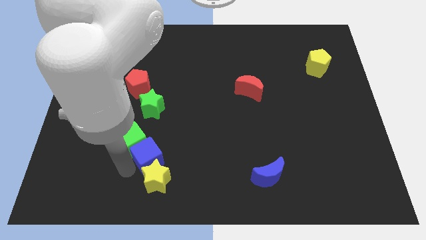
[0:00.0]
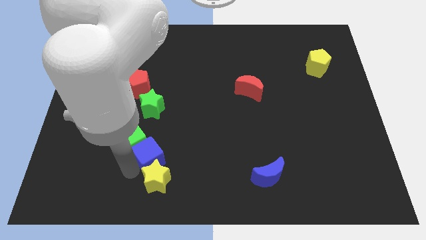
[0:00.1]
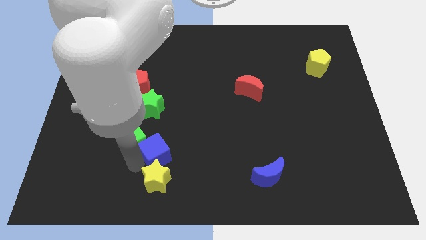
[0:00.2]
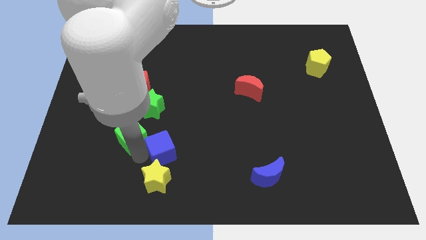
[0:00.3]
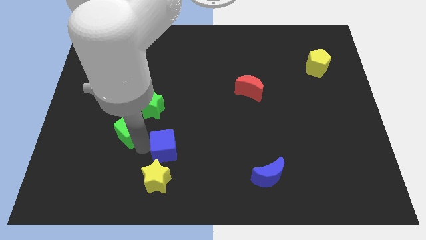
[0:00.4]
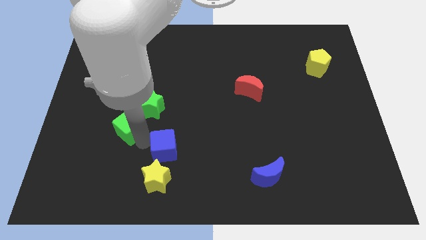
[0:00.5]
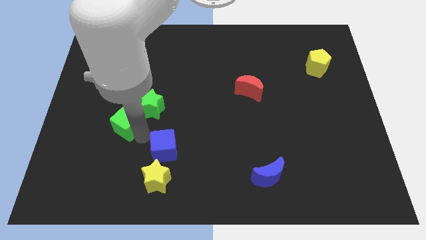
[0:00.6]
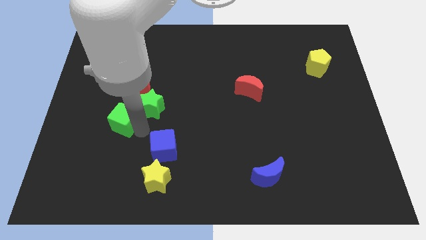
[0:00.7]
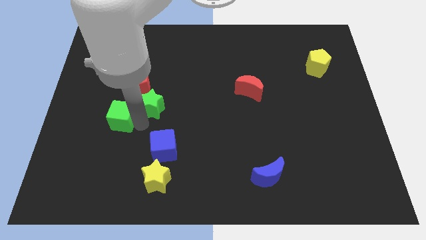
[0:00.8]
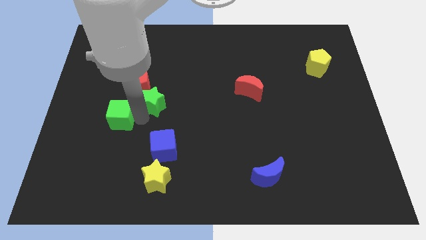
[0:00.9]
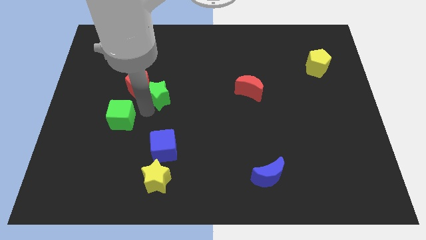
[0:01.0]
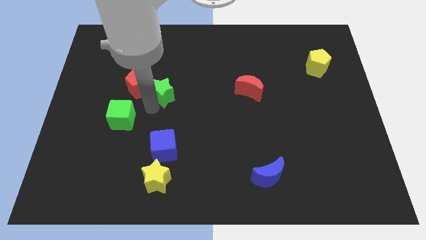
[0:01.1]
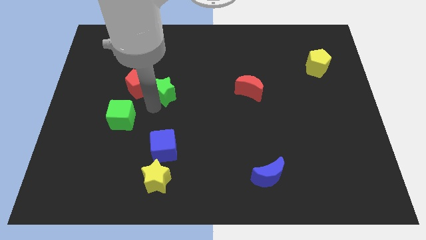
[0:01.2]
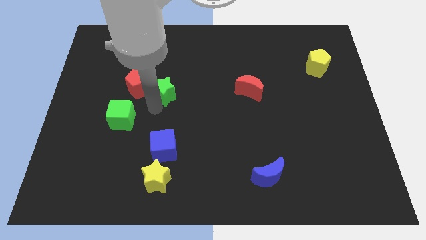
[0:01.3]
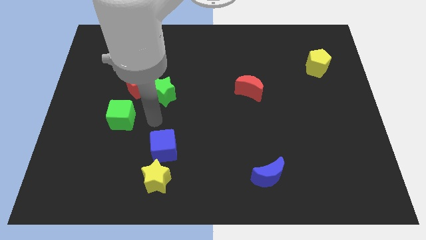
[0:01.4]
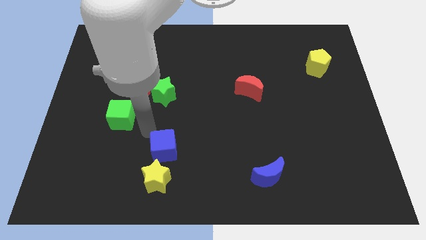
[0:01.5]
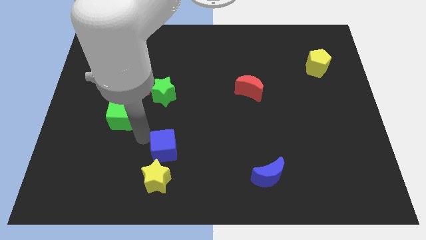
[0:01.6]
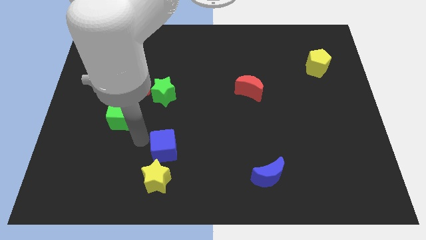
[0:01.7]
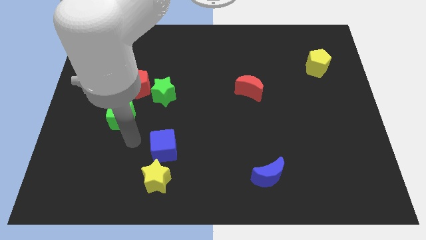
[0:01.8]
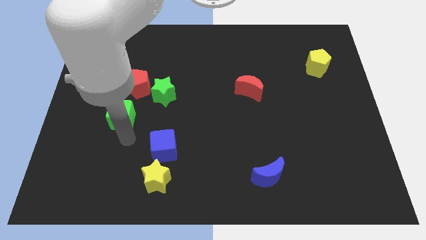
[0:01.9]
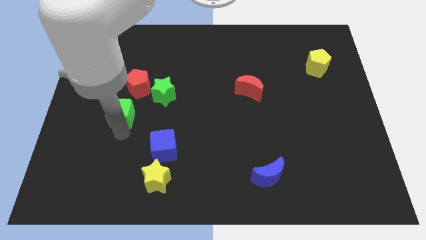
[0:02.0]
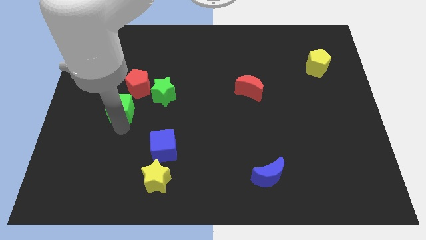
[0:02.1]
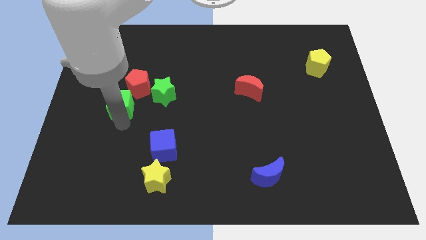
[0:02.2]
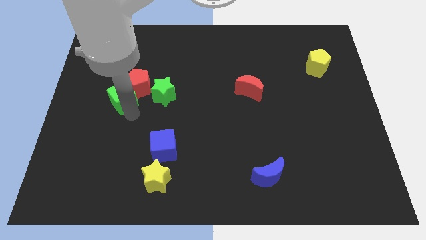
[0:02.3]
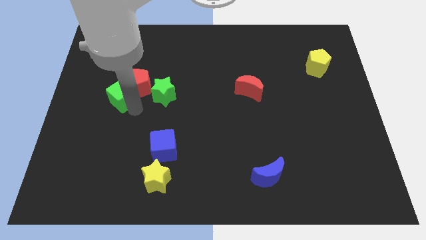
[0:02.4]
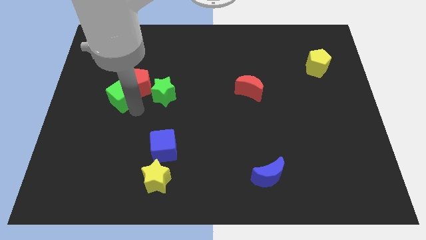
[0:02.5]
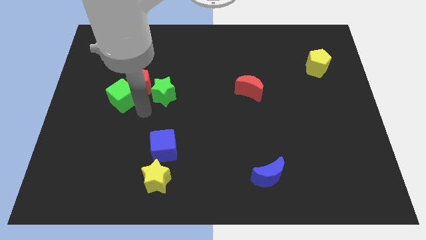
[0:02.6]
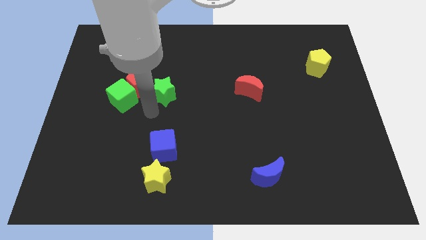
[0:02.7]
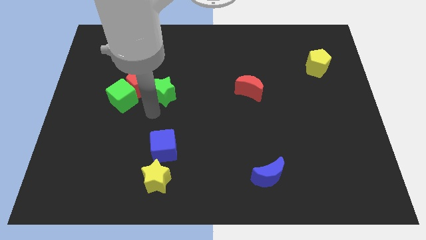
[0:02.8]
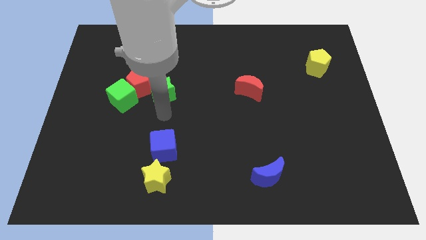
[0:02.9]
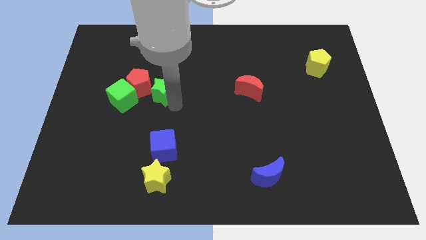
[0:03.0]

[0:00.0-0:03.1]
place the green blocks into the red pentagon

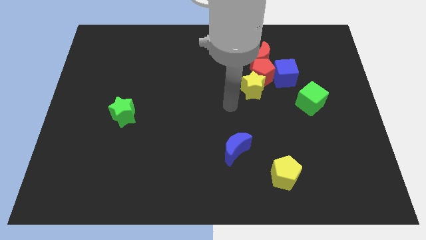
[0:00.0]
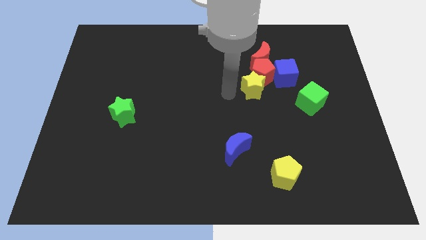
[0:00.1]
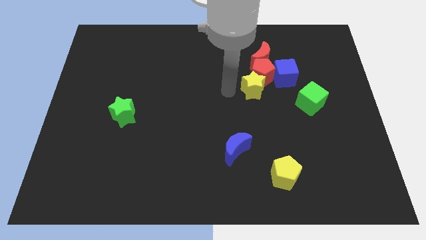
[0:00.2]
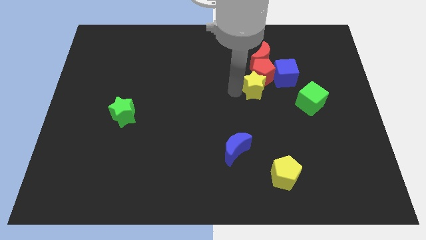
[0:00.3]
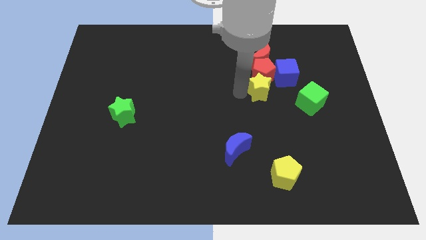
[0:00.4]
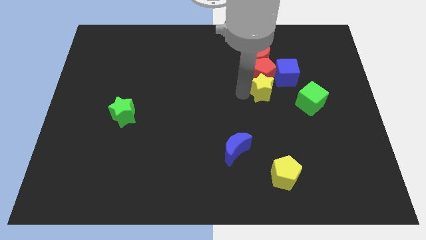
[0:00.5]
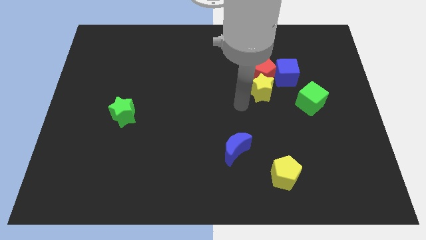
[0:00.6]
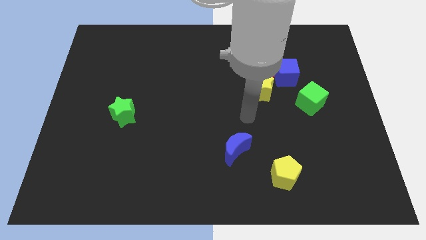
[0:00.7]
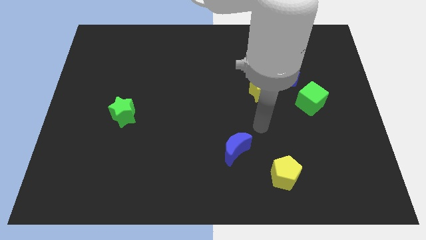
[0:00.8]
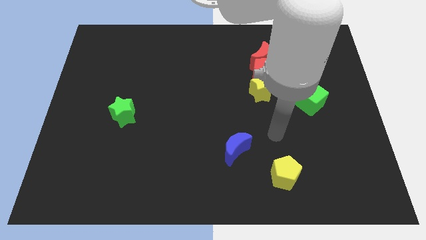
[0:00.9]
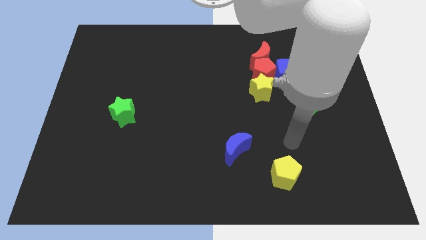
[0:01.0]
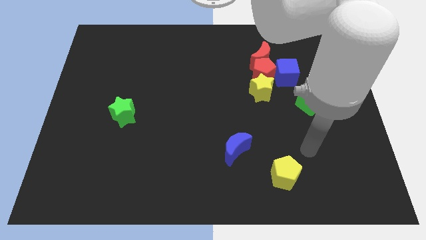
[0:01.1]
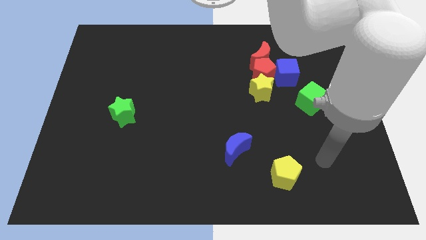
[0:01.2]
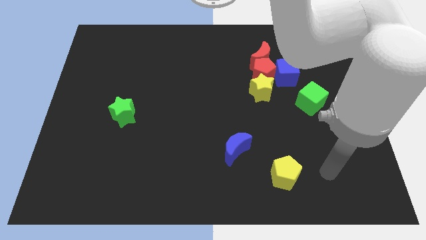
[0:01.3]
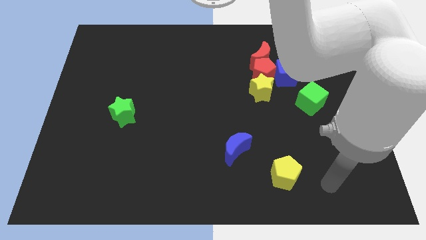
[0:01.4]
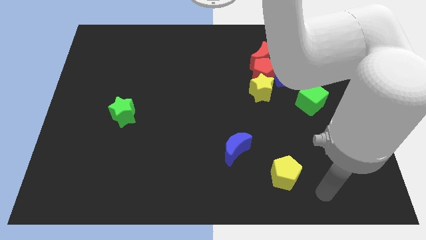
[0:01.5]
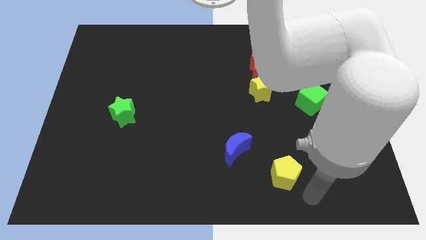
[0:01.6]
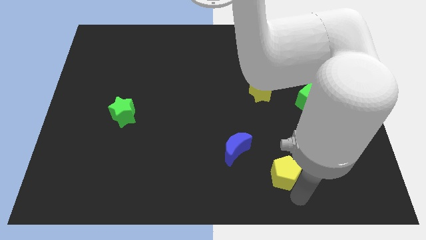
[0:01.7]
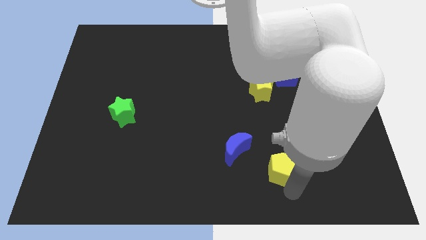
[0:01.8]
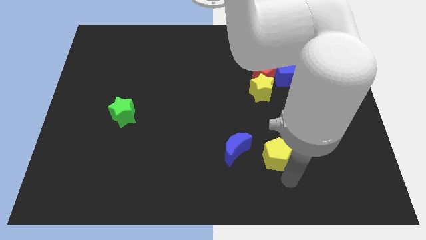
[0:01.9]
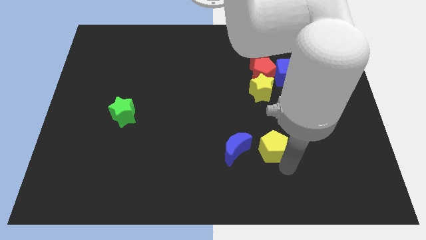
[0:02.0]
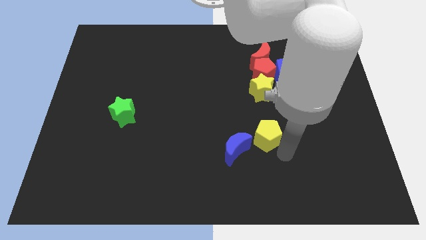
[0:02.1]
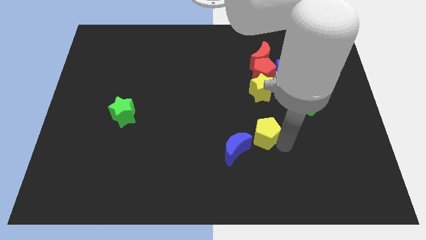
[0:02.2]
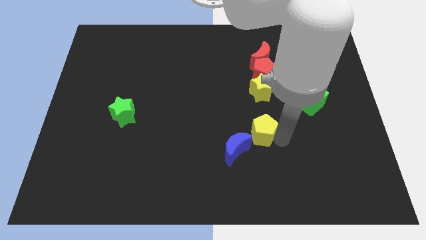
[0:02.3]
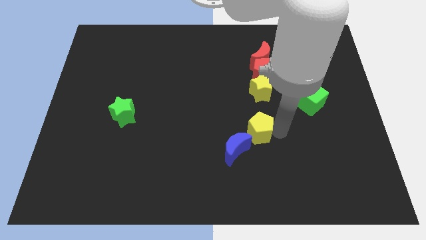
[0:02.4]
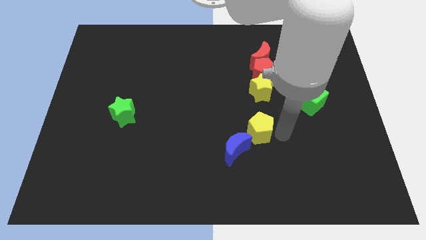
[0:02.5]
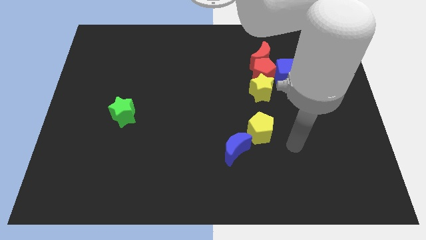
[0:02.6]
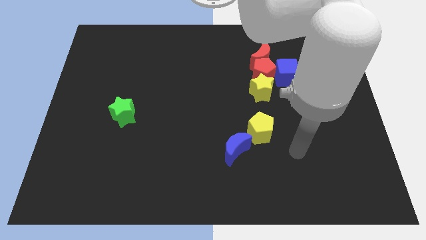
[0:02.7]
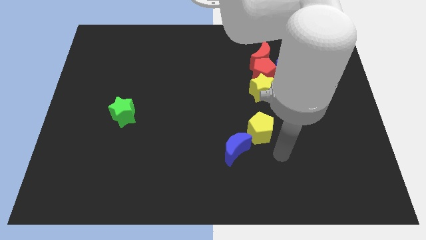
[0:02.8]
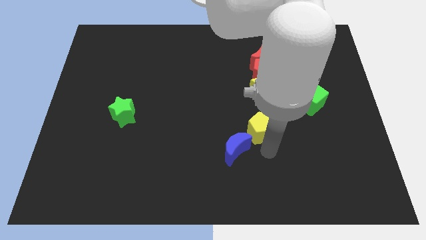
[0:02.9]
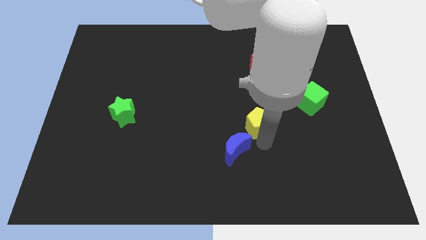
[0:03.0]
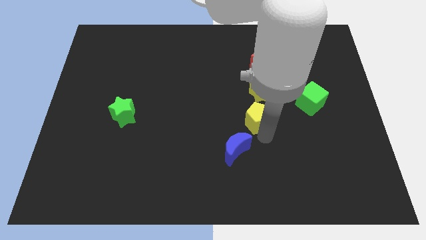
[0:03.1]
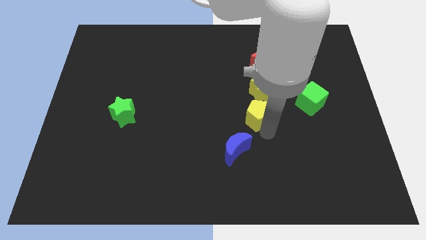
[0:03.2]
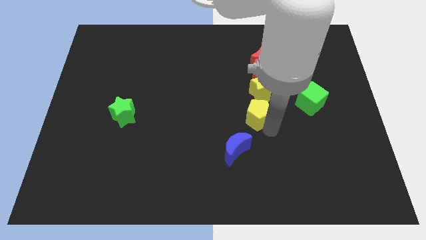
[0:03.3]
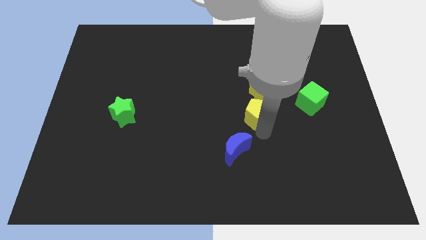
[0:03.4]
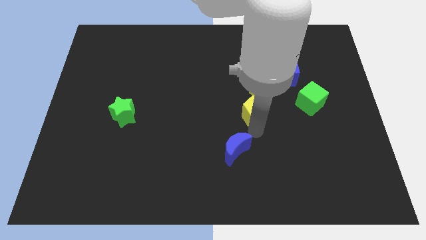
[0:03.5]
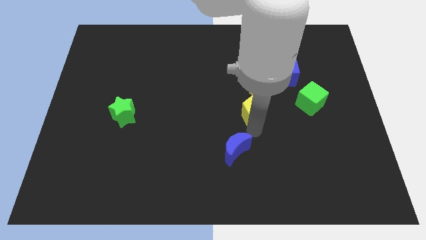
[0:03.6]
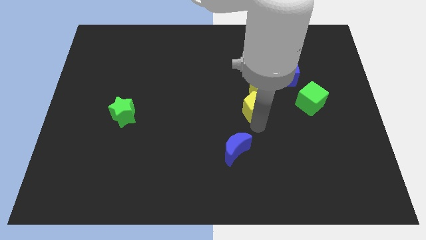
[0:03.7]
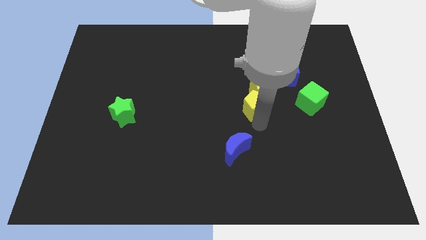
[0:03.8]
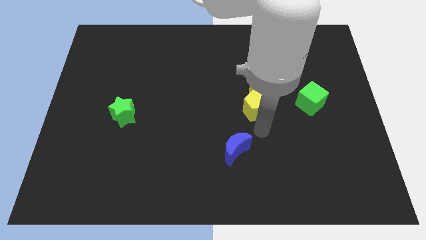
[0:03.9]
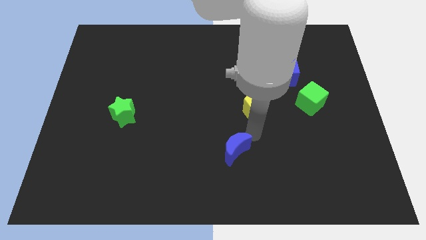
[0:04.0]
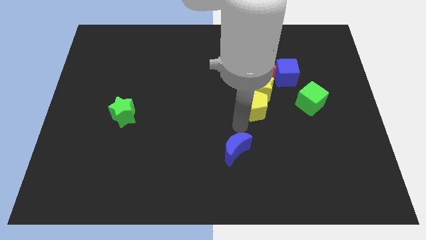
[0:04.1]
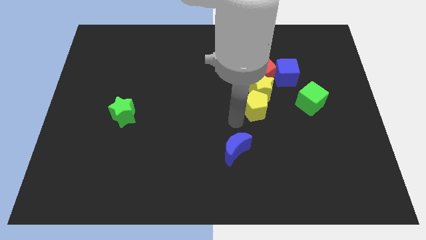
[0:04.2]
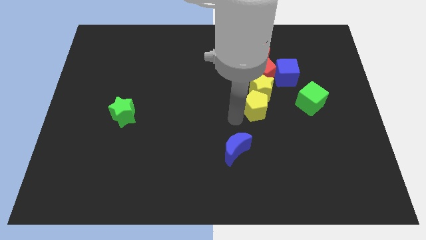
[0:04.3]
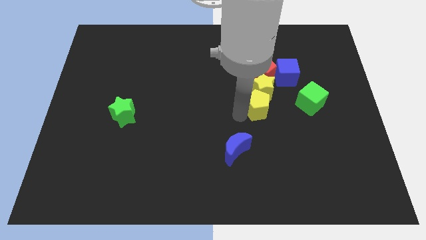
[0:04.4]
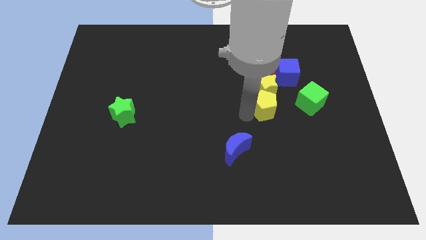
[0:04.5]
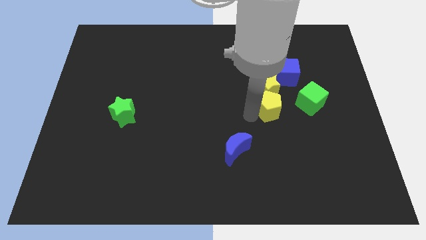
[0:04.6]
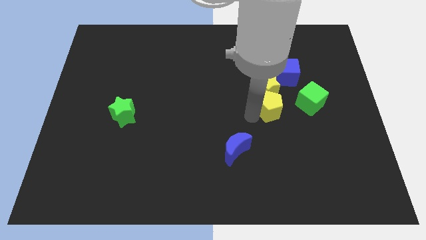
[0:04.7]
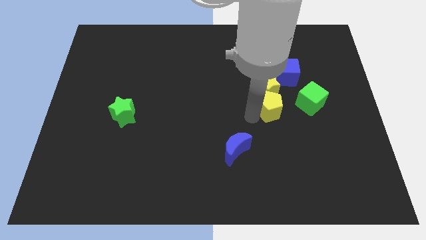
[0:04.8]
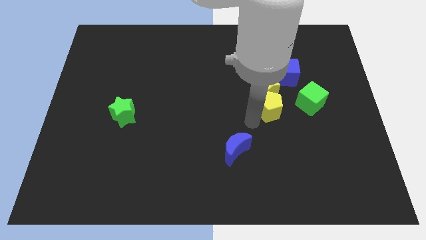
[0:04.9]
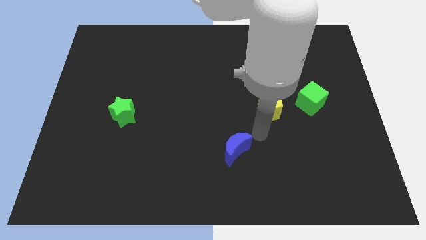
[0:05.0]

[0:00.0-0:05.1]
place the yellow blocks to the left of the green cube

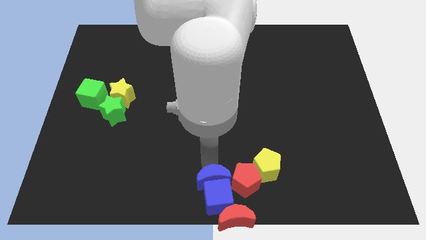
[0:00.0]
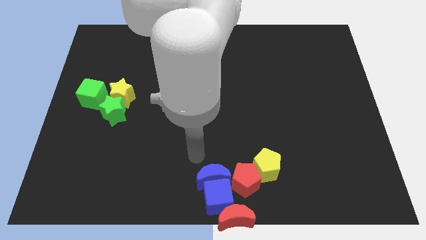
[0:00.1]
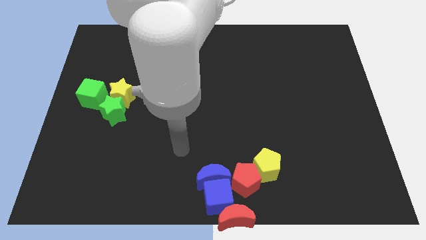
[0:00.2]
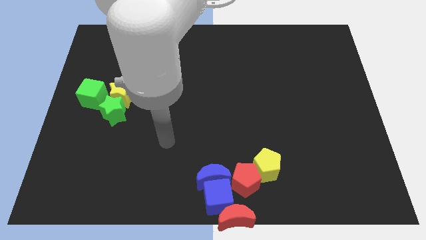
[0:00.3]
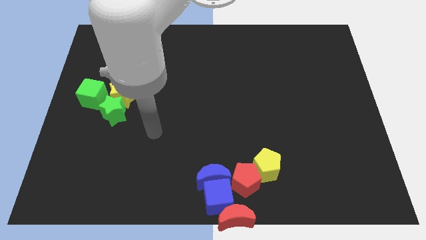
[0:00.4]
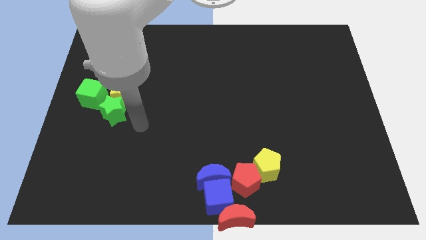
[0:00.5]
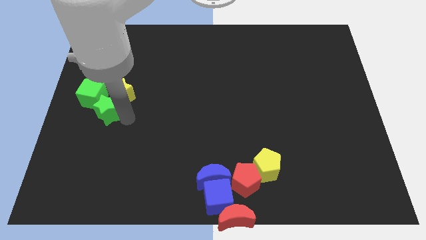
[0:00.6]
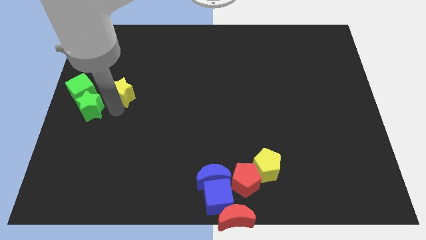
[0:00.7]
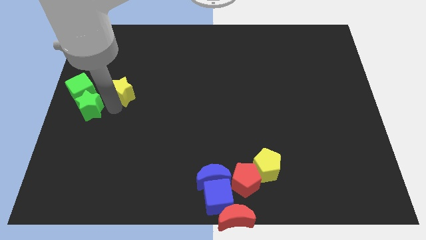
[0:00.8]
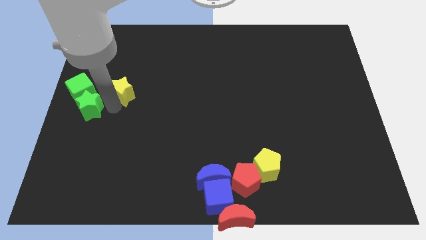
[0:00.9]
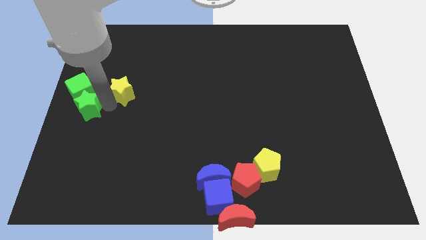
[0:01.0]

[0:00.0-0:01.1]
push the green cube with the green star
